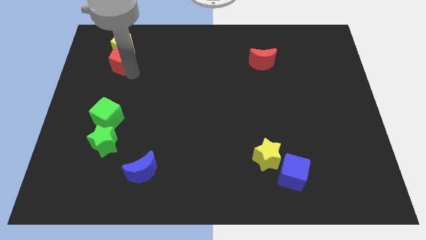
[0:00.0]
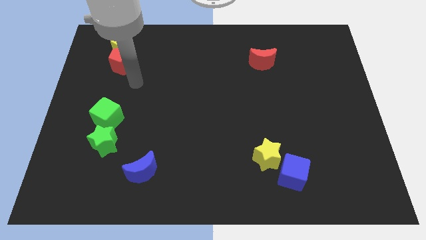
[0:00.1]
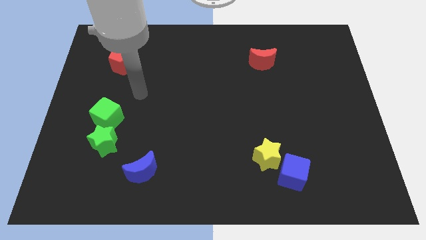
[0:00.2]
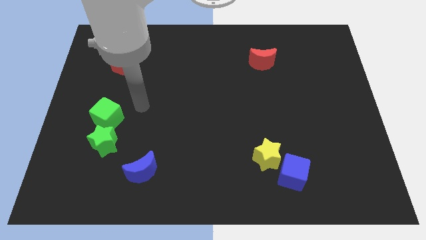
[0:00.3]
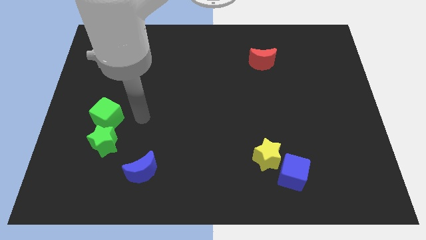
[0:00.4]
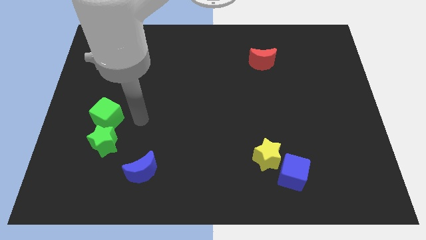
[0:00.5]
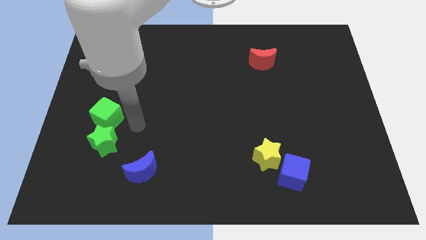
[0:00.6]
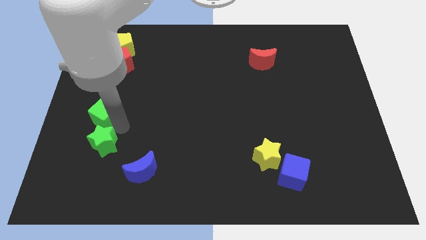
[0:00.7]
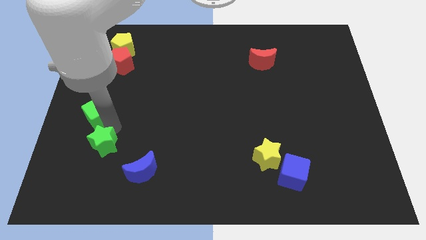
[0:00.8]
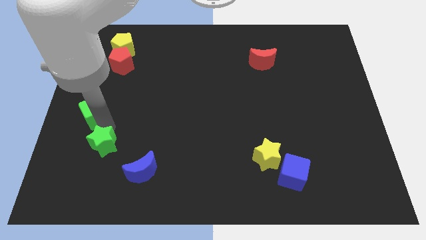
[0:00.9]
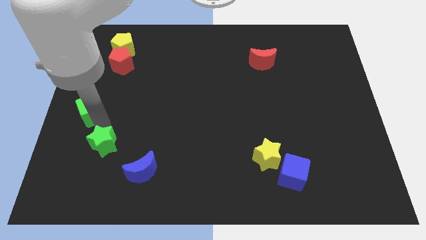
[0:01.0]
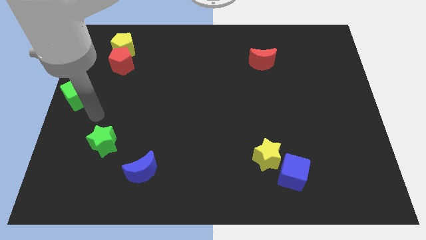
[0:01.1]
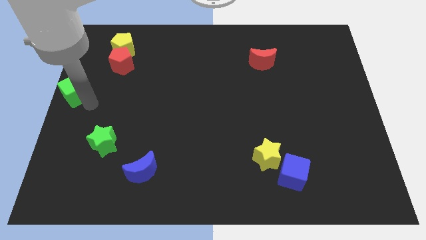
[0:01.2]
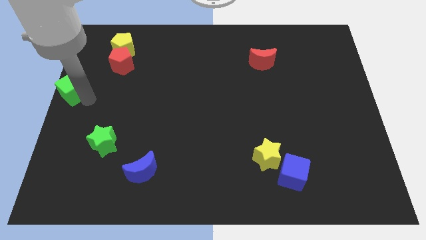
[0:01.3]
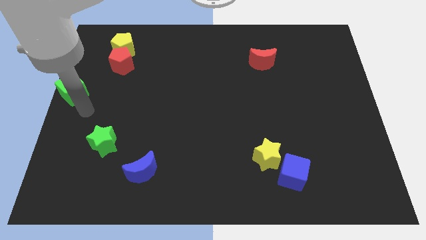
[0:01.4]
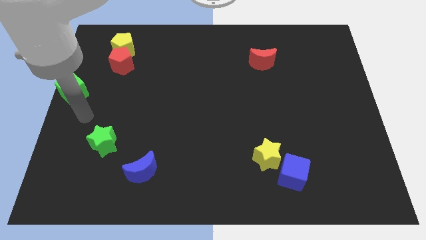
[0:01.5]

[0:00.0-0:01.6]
place the green cube to the left center of the board

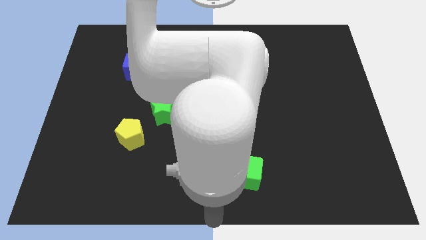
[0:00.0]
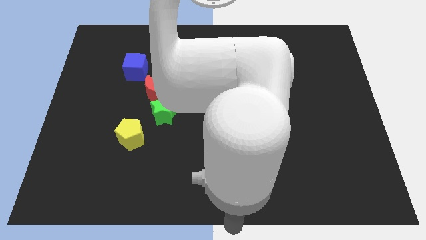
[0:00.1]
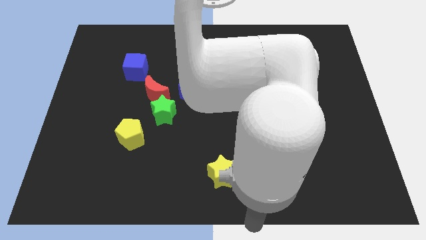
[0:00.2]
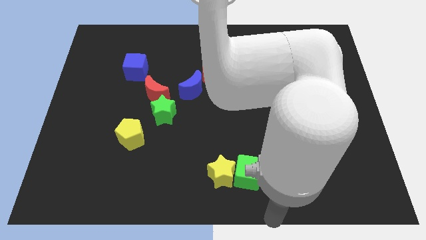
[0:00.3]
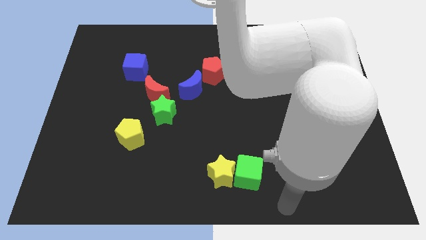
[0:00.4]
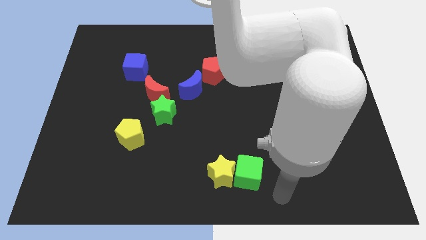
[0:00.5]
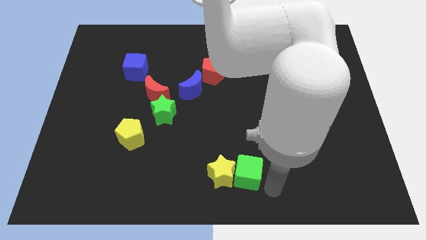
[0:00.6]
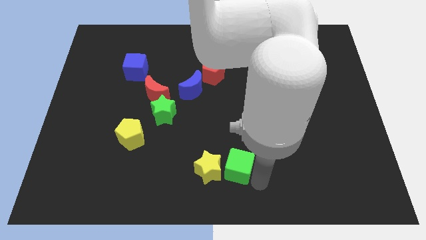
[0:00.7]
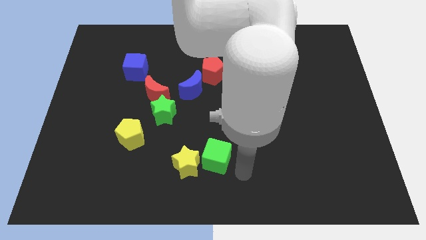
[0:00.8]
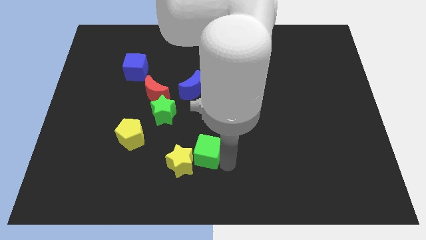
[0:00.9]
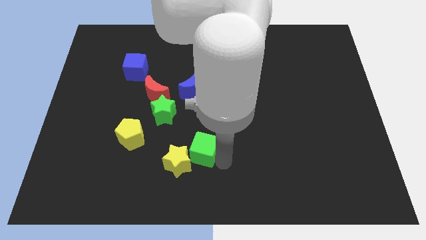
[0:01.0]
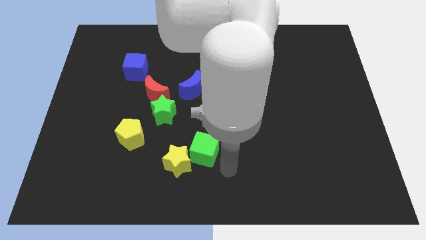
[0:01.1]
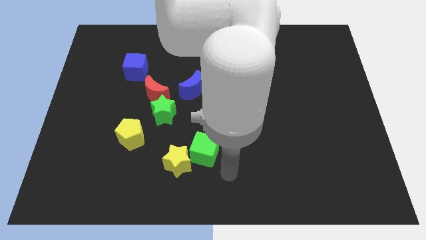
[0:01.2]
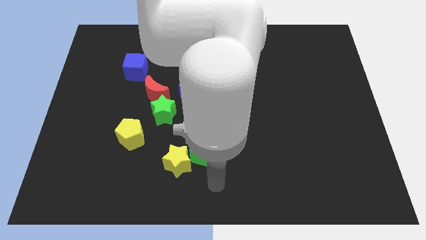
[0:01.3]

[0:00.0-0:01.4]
push both the green cube and yellow star together diagonally on the bottom right side of the green star

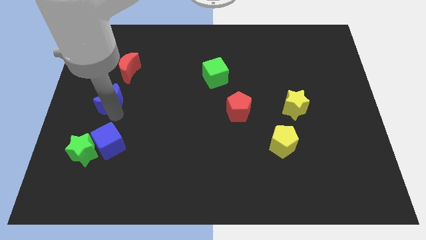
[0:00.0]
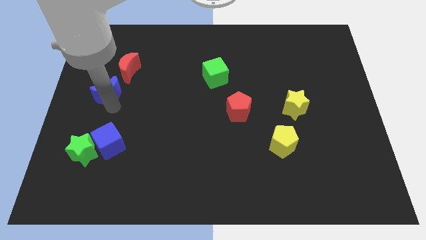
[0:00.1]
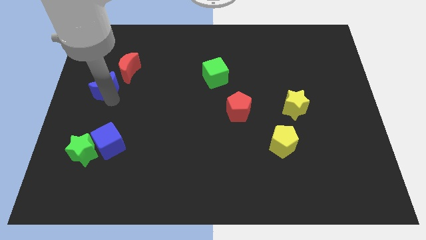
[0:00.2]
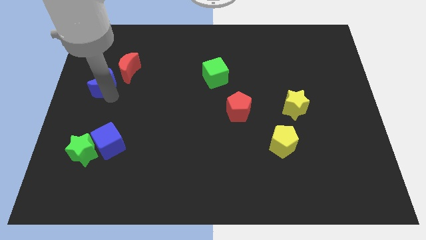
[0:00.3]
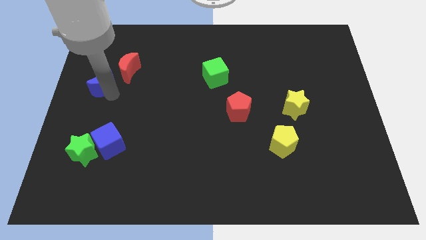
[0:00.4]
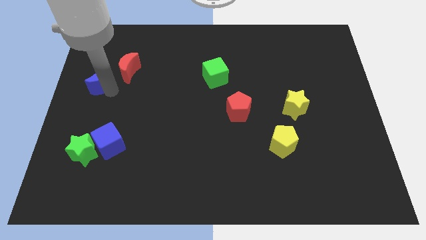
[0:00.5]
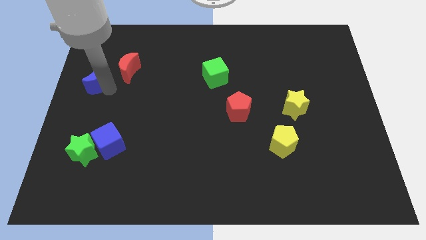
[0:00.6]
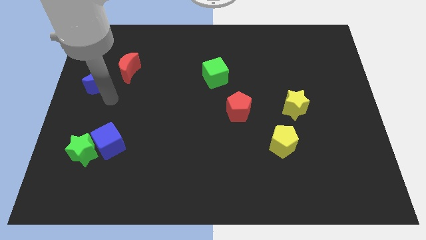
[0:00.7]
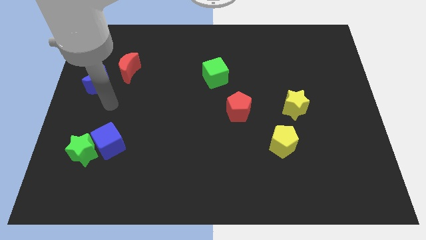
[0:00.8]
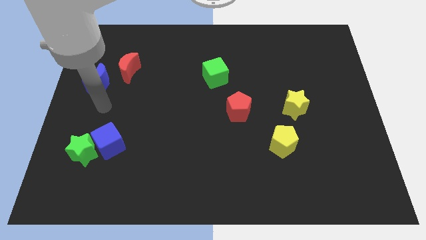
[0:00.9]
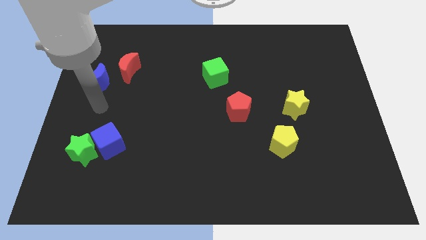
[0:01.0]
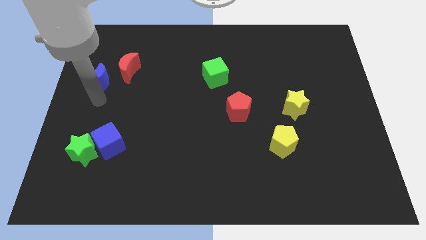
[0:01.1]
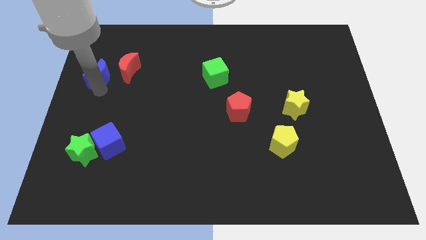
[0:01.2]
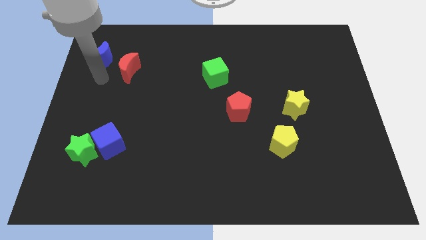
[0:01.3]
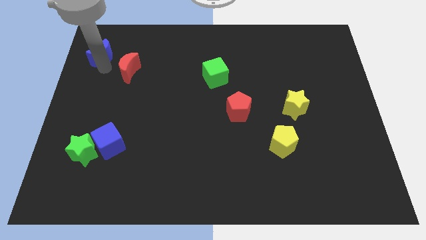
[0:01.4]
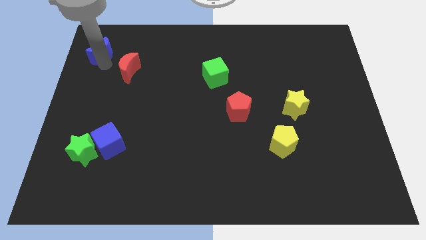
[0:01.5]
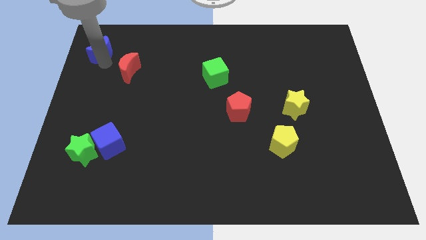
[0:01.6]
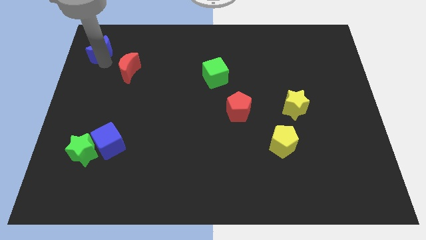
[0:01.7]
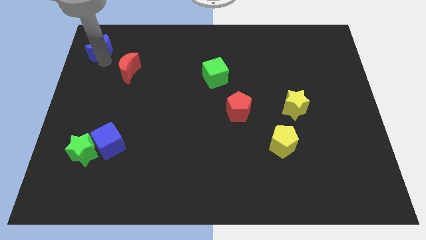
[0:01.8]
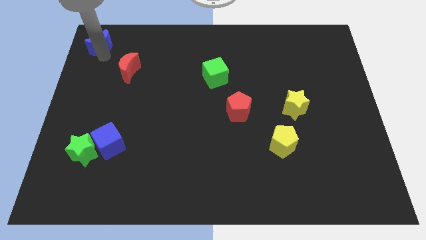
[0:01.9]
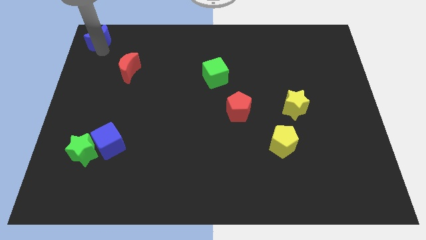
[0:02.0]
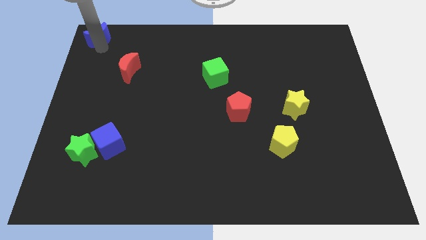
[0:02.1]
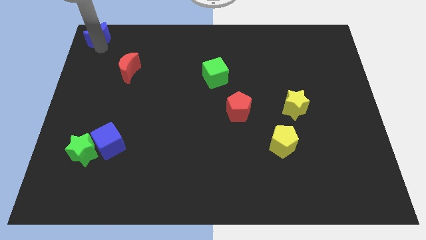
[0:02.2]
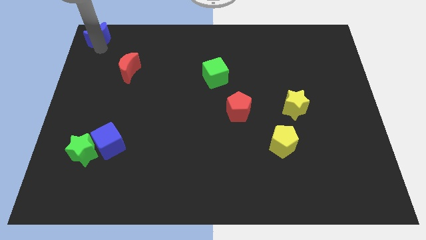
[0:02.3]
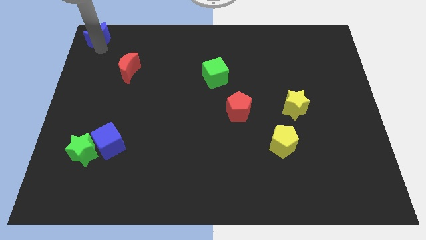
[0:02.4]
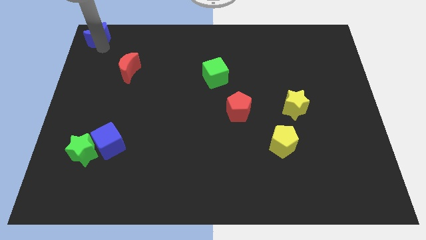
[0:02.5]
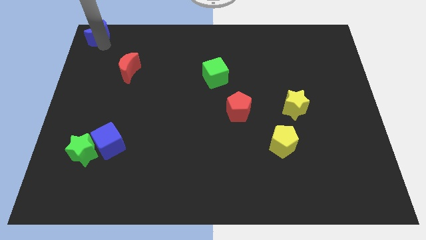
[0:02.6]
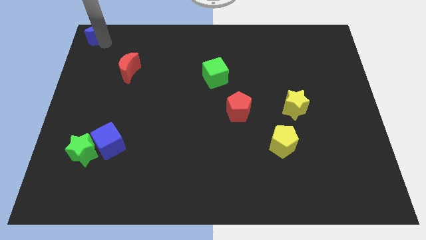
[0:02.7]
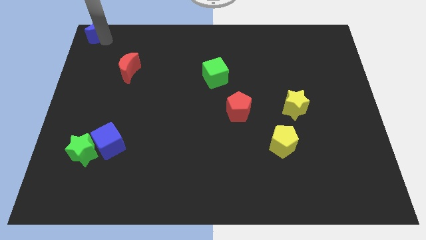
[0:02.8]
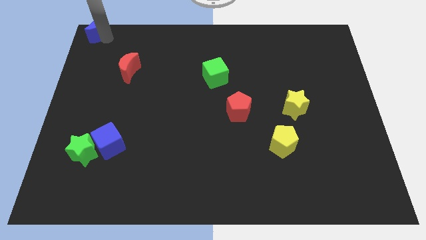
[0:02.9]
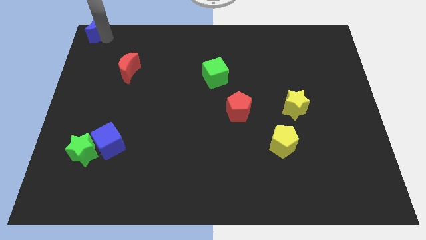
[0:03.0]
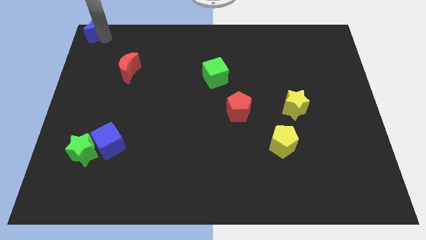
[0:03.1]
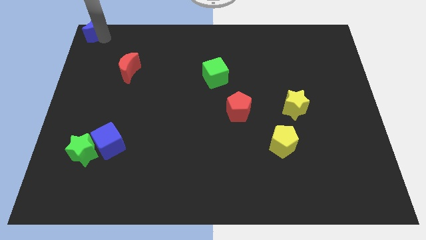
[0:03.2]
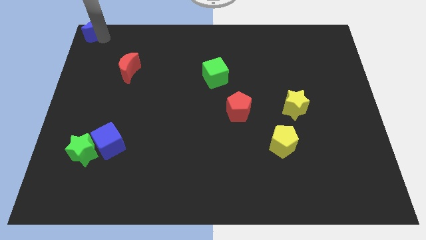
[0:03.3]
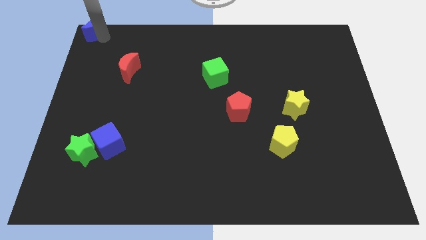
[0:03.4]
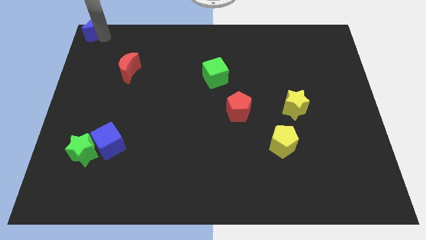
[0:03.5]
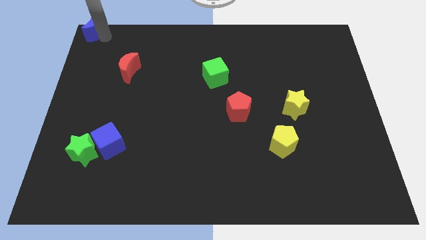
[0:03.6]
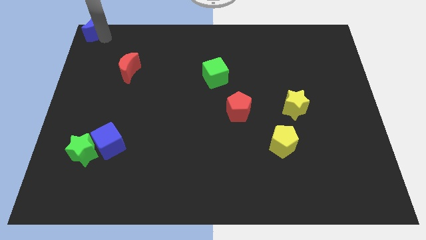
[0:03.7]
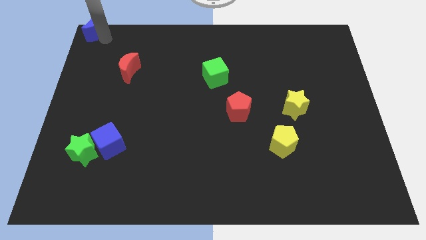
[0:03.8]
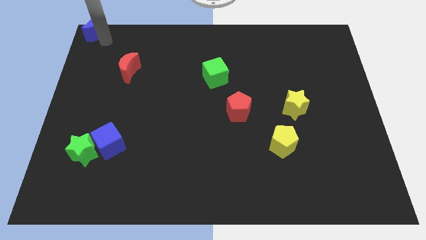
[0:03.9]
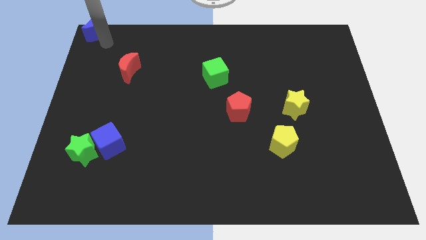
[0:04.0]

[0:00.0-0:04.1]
place the blue crescent to the top left corner of the board

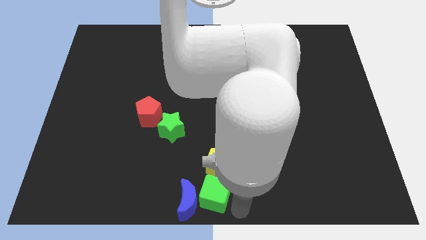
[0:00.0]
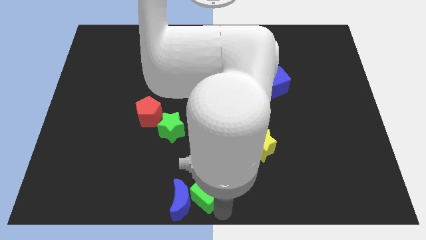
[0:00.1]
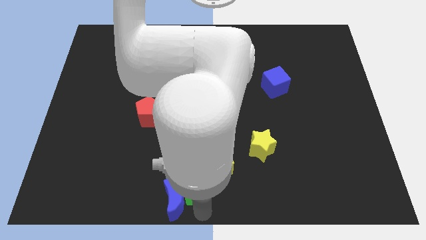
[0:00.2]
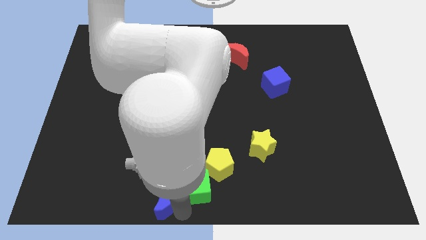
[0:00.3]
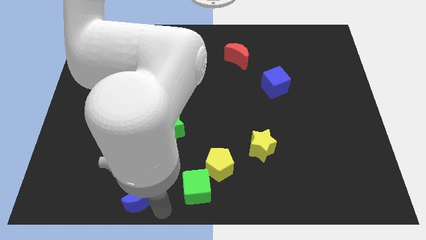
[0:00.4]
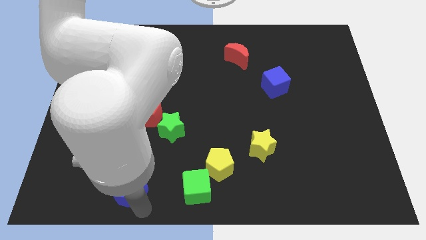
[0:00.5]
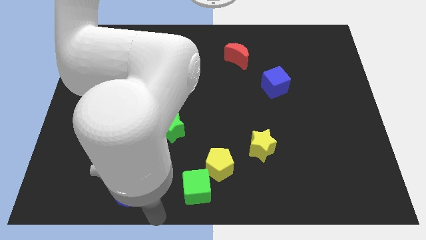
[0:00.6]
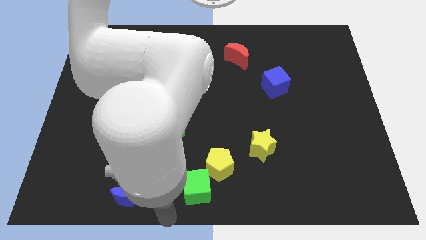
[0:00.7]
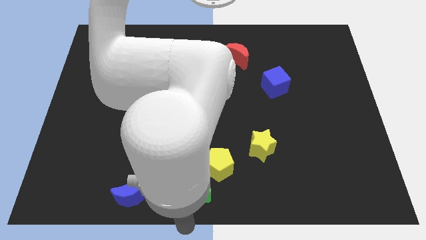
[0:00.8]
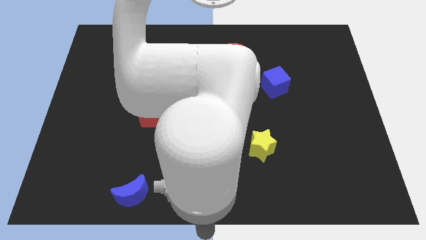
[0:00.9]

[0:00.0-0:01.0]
separate the blue crescent from the green cube

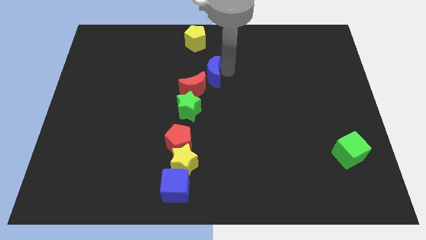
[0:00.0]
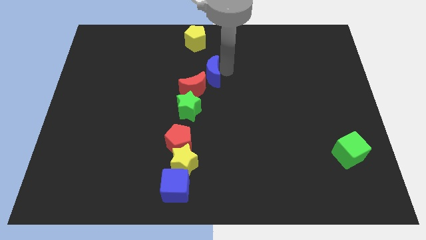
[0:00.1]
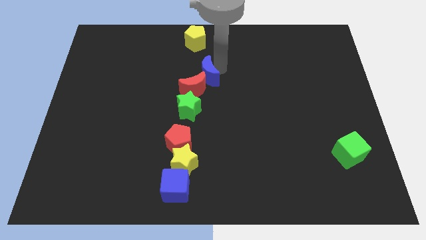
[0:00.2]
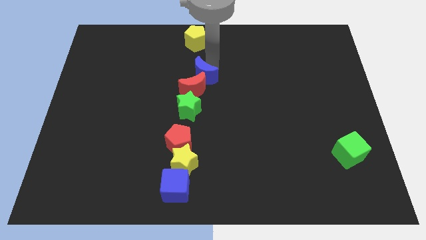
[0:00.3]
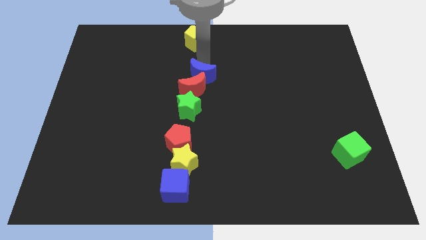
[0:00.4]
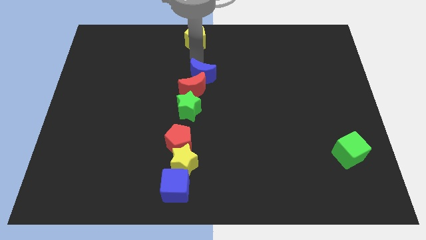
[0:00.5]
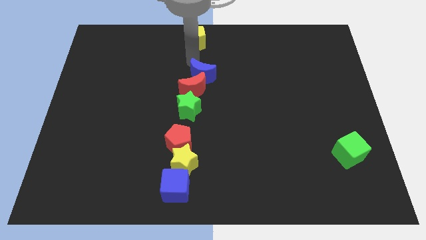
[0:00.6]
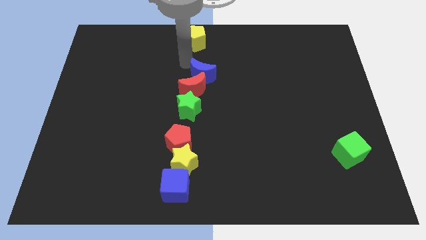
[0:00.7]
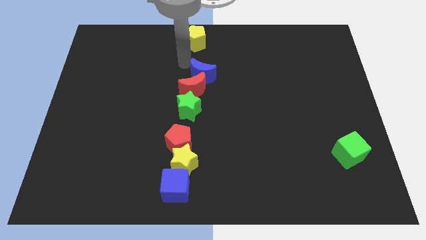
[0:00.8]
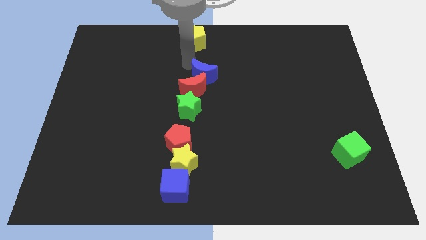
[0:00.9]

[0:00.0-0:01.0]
place the blue crescent towards the top right side of the red crescent
